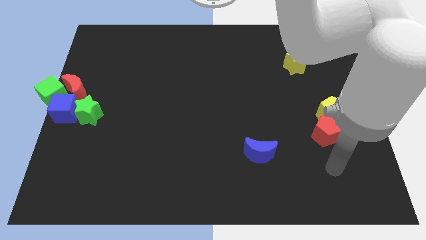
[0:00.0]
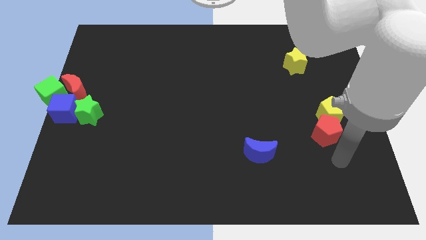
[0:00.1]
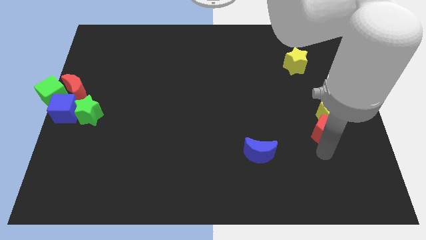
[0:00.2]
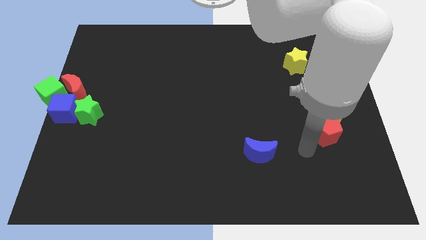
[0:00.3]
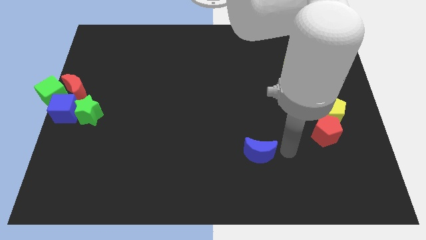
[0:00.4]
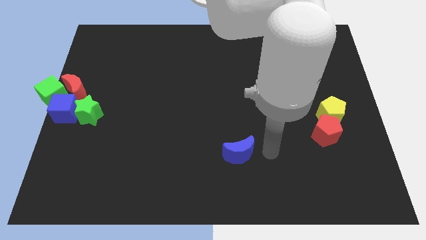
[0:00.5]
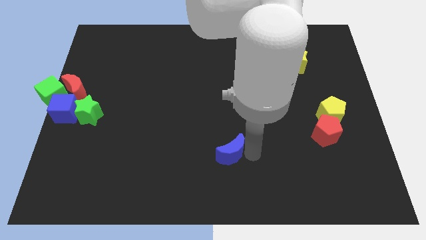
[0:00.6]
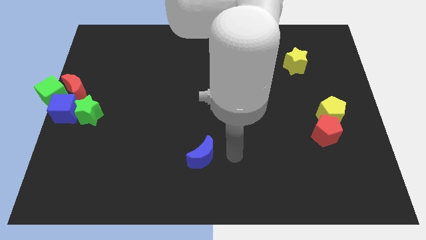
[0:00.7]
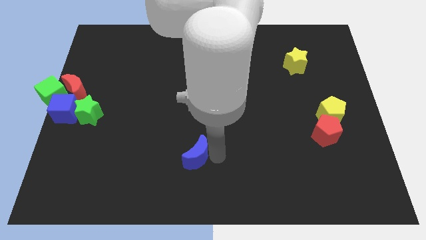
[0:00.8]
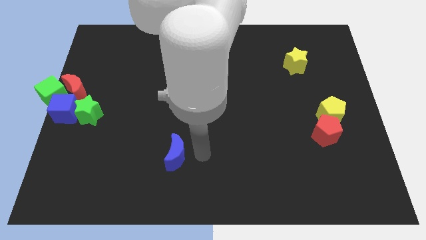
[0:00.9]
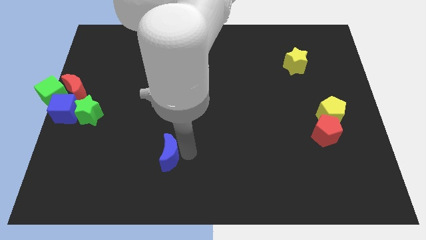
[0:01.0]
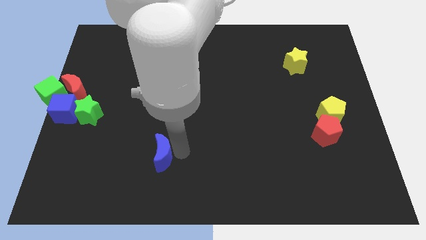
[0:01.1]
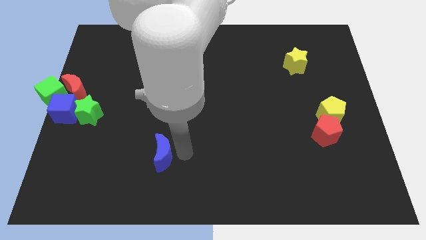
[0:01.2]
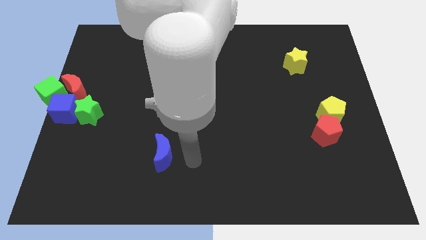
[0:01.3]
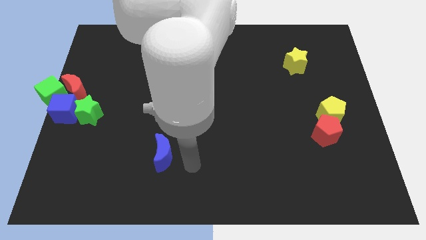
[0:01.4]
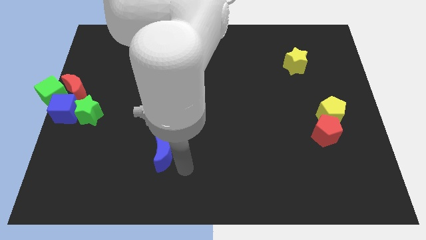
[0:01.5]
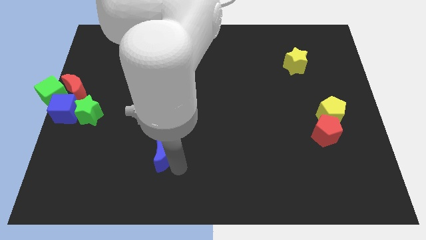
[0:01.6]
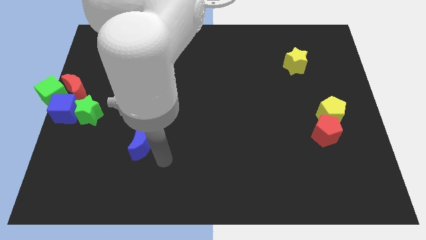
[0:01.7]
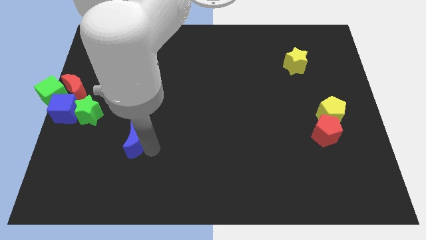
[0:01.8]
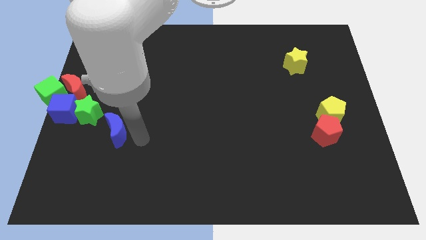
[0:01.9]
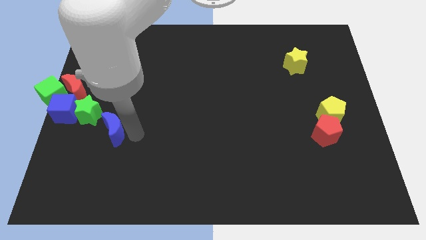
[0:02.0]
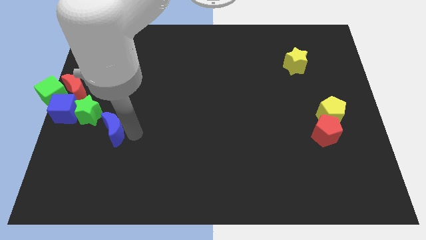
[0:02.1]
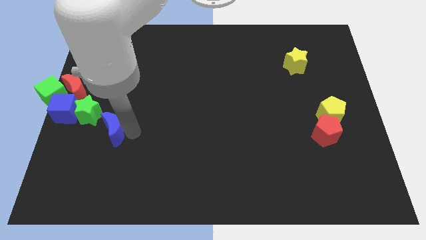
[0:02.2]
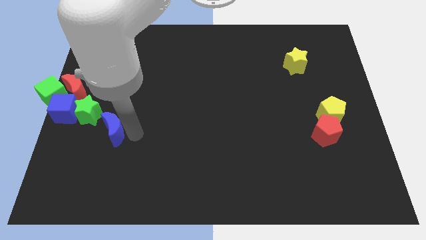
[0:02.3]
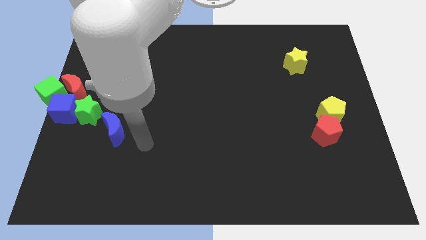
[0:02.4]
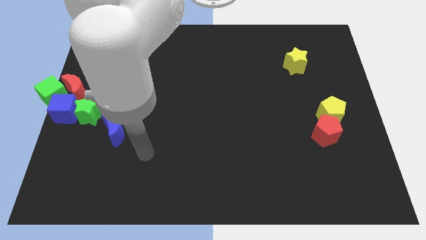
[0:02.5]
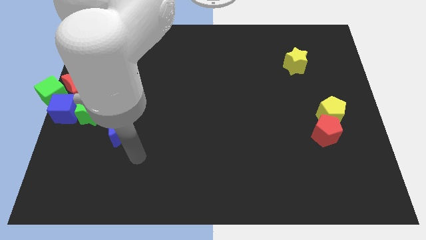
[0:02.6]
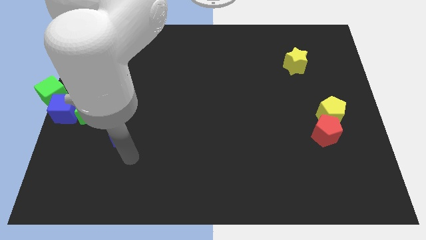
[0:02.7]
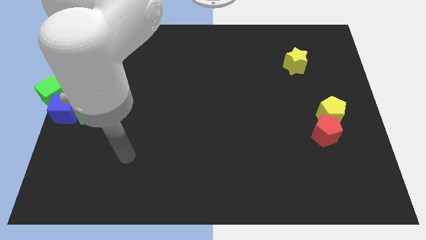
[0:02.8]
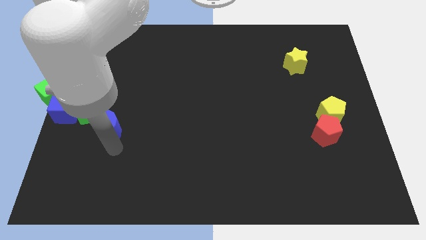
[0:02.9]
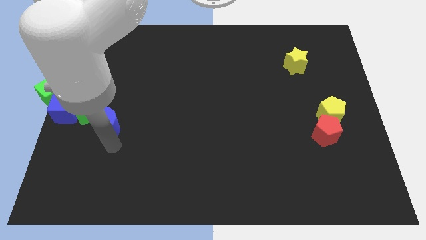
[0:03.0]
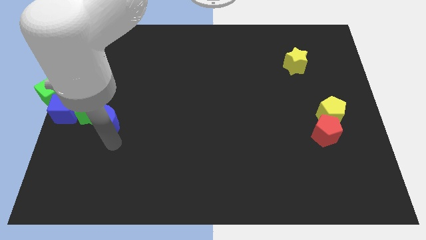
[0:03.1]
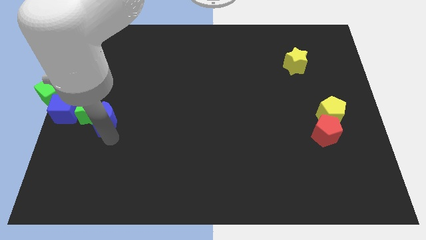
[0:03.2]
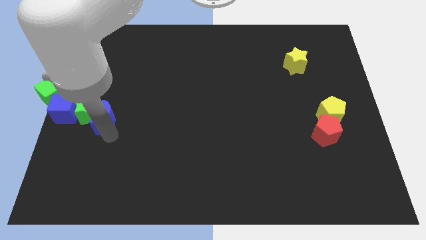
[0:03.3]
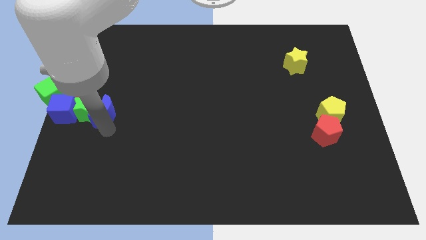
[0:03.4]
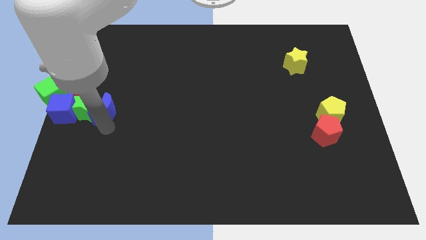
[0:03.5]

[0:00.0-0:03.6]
put the blue moon right of the green star

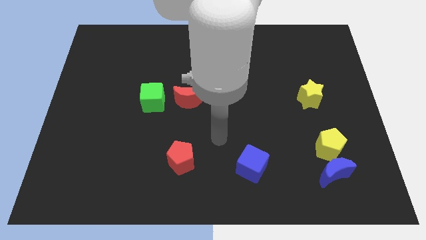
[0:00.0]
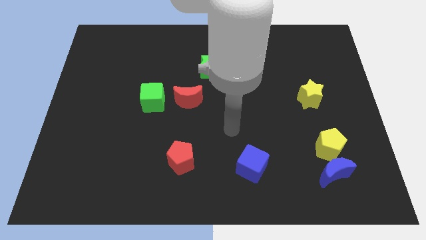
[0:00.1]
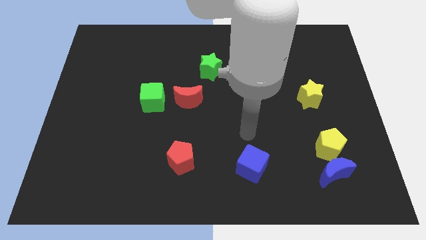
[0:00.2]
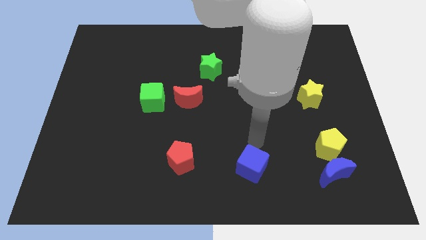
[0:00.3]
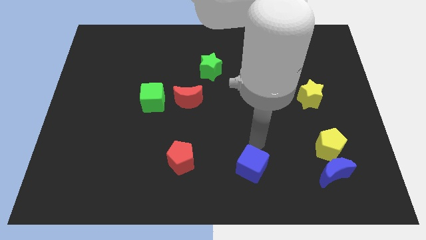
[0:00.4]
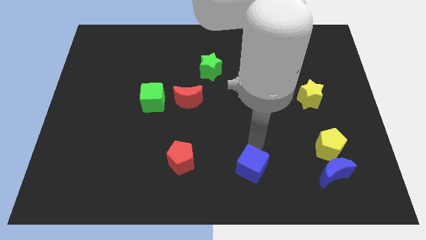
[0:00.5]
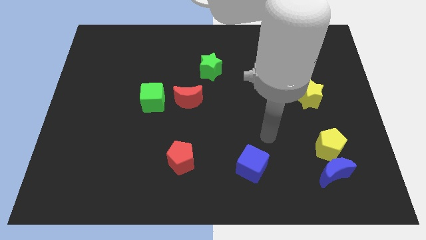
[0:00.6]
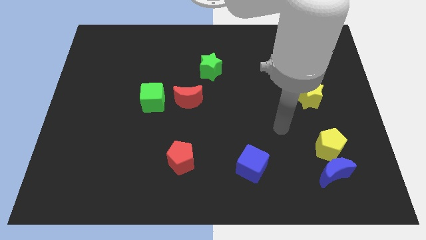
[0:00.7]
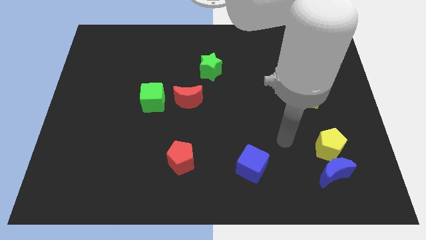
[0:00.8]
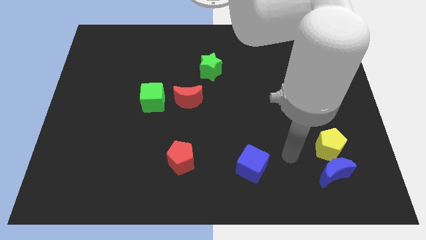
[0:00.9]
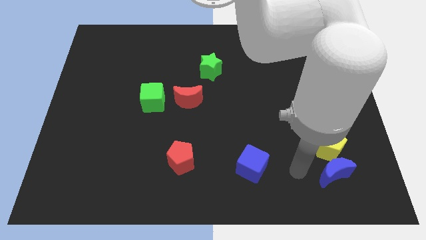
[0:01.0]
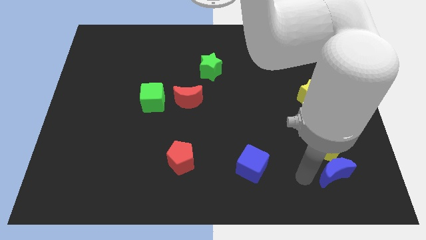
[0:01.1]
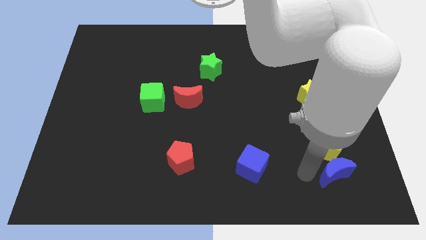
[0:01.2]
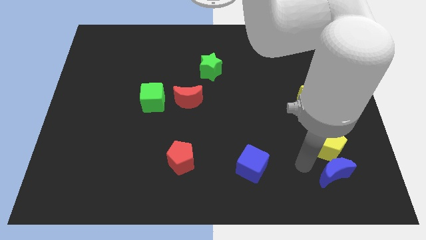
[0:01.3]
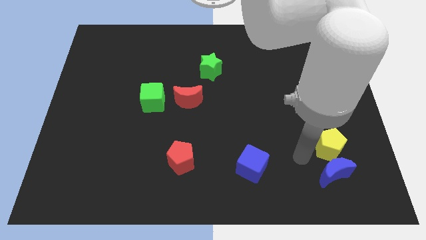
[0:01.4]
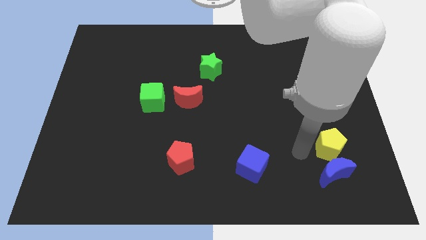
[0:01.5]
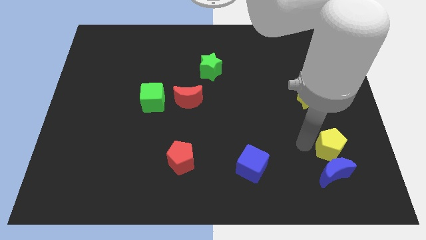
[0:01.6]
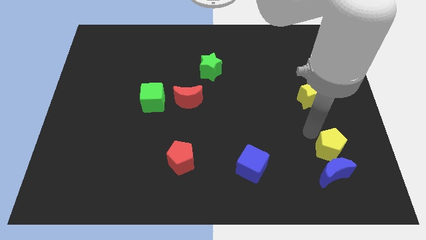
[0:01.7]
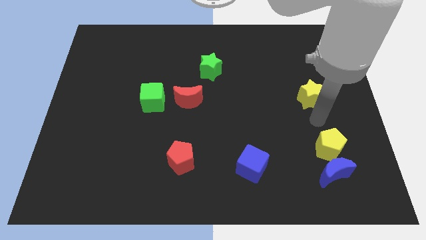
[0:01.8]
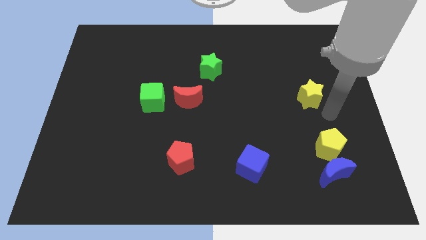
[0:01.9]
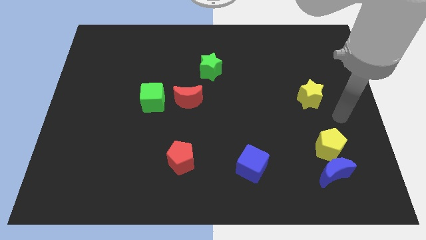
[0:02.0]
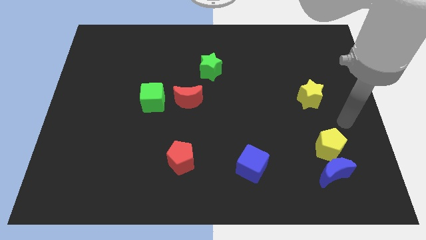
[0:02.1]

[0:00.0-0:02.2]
drag the arm towards the yellow pentagon

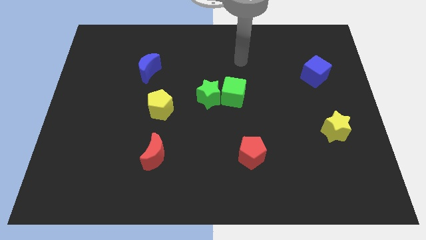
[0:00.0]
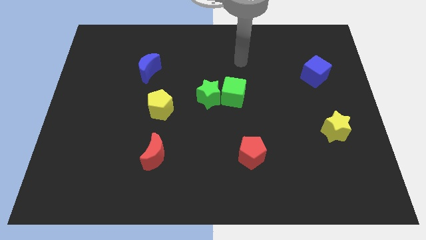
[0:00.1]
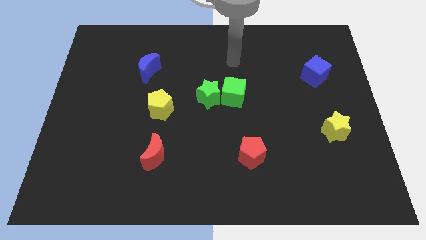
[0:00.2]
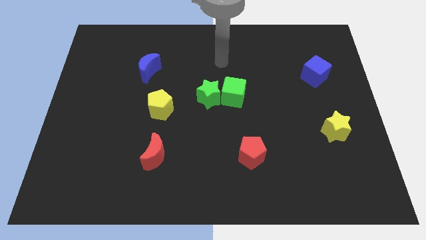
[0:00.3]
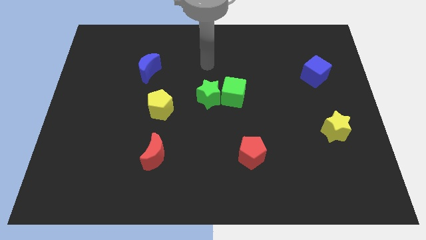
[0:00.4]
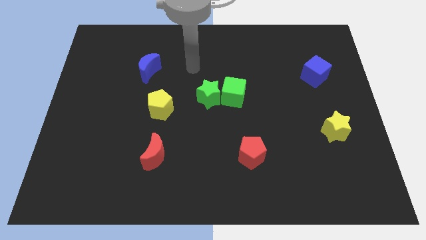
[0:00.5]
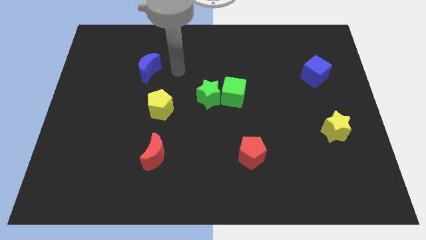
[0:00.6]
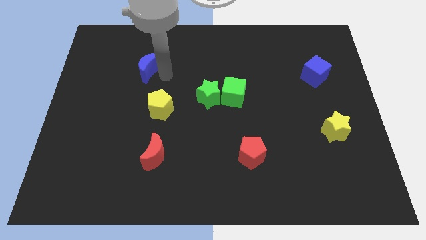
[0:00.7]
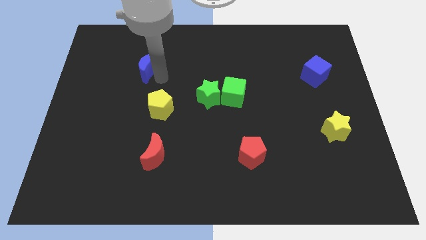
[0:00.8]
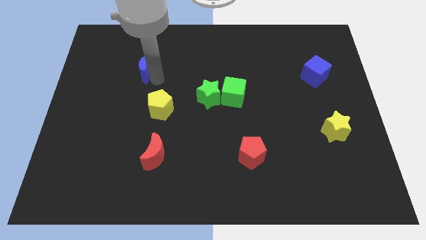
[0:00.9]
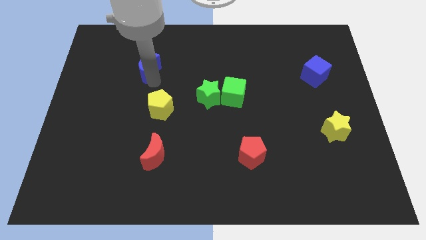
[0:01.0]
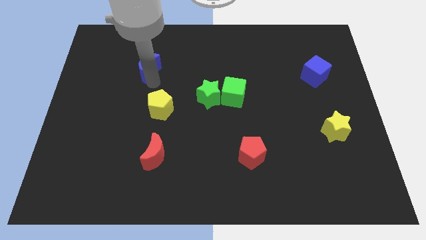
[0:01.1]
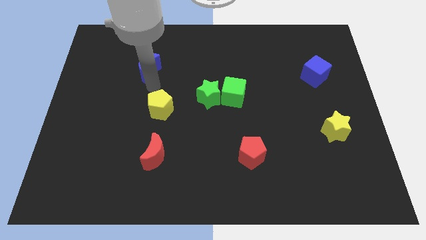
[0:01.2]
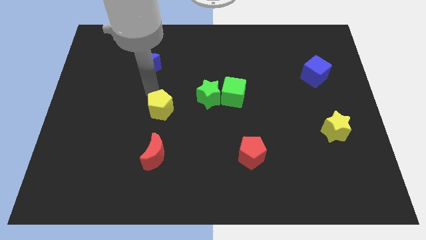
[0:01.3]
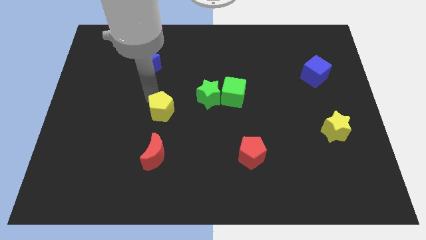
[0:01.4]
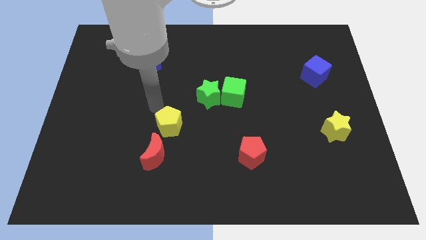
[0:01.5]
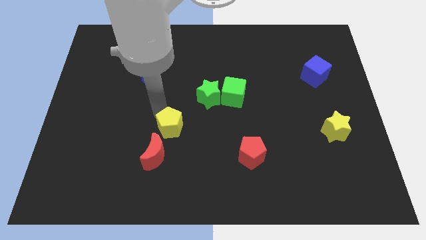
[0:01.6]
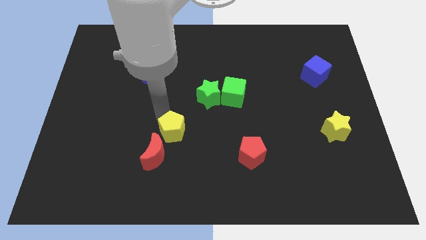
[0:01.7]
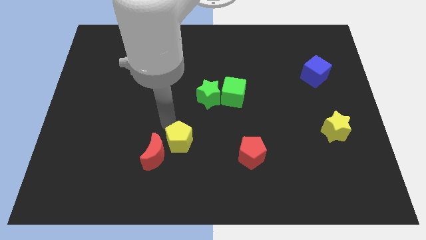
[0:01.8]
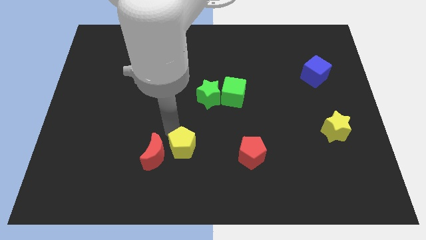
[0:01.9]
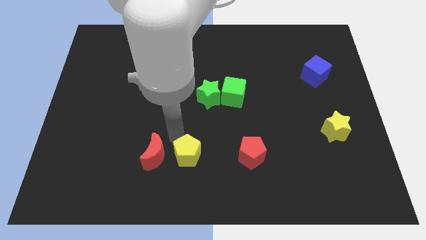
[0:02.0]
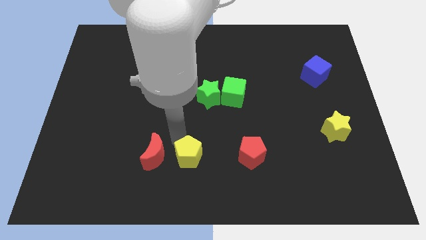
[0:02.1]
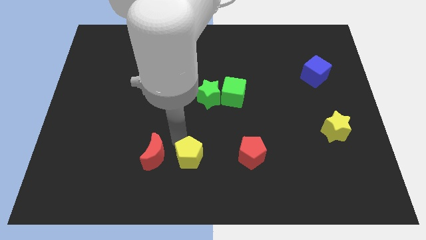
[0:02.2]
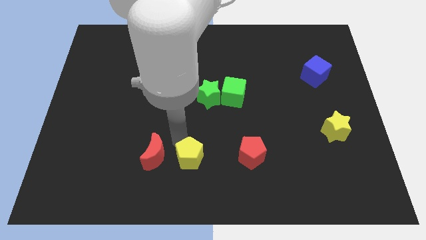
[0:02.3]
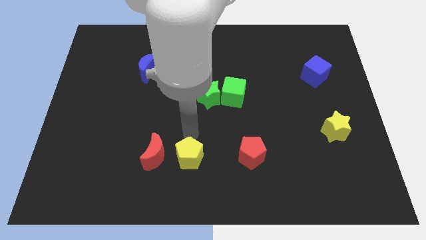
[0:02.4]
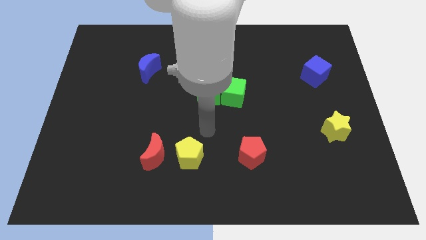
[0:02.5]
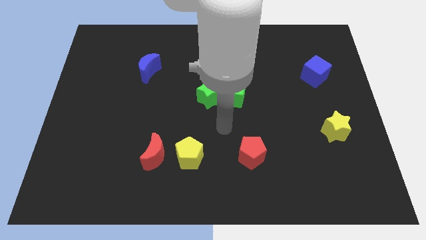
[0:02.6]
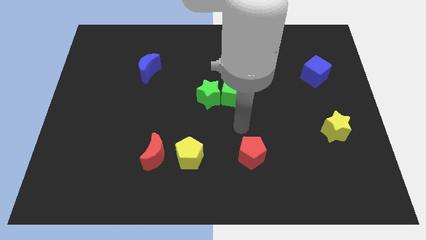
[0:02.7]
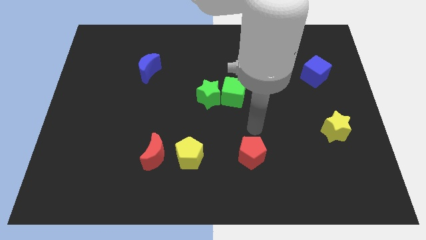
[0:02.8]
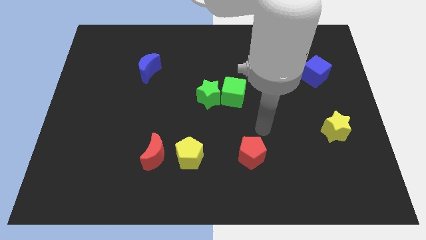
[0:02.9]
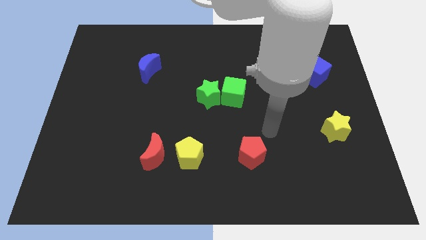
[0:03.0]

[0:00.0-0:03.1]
put the yellow pentagon right to the red moon
